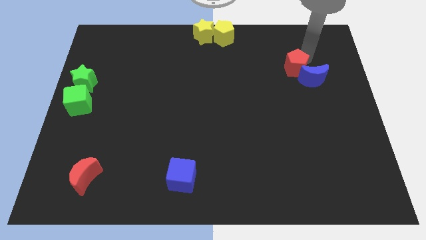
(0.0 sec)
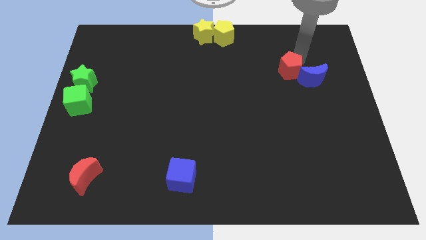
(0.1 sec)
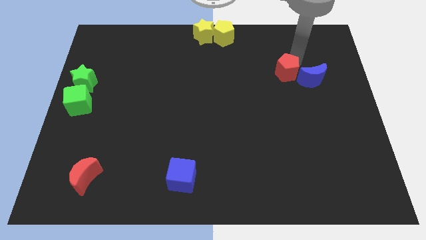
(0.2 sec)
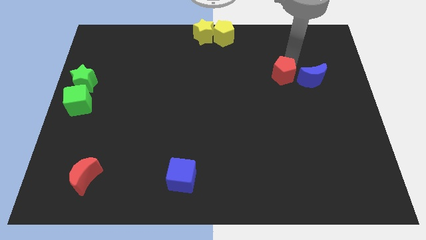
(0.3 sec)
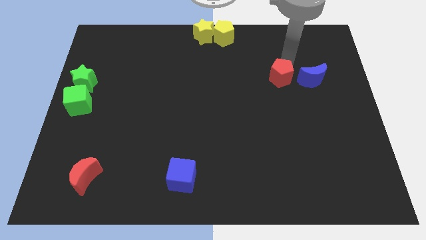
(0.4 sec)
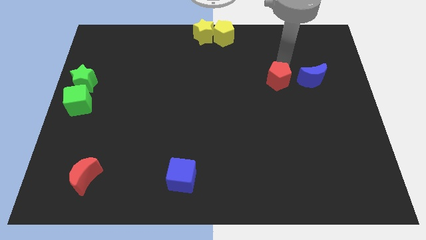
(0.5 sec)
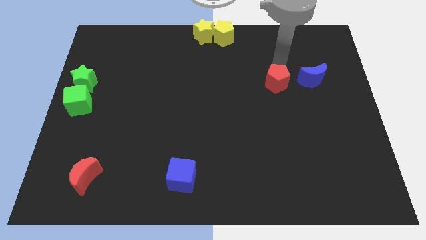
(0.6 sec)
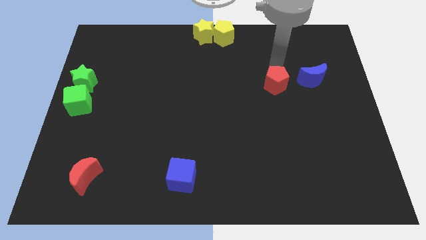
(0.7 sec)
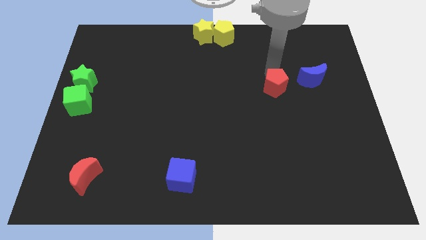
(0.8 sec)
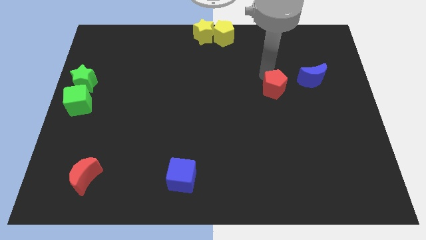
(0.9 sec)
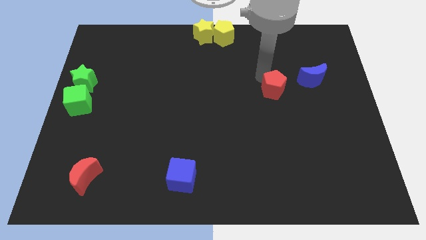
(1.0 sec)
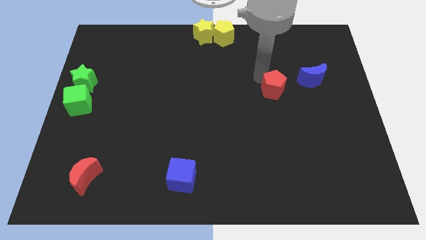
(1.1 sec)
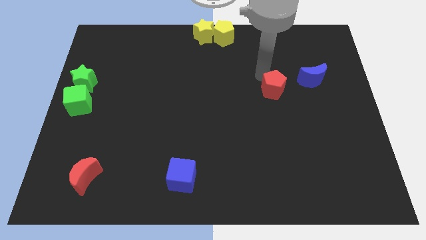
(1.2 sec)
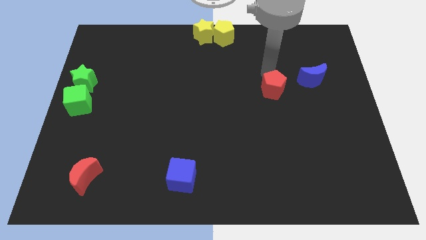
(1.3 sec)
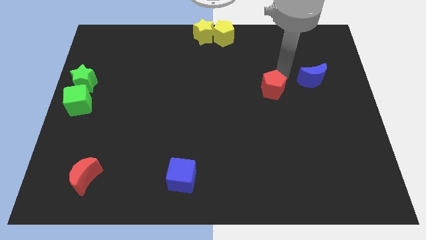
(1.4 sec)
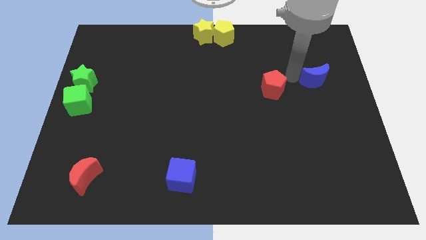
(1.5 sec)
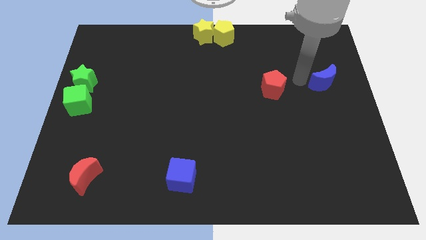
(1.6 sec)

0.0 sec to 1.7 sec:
separate the red pentagon and the blue crescent

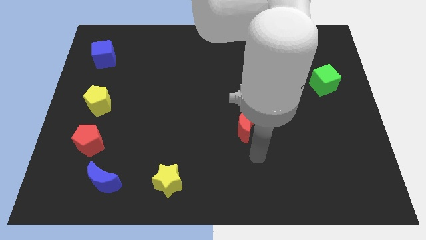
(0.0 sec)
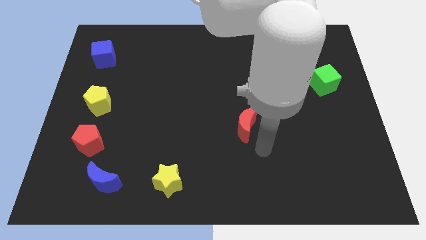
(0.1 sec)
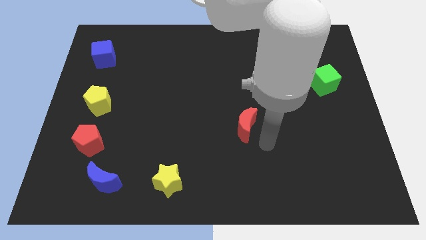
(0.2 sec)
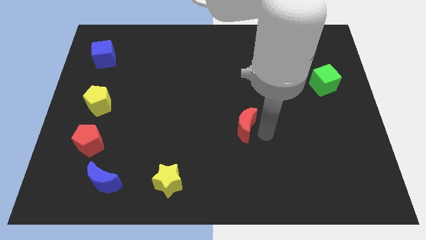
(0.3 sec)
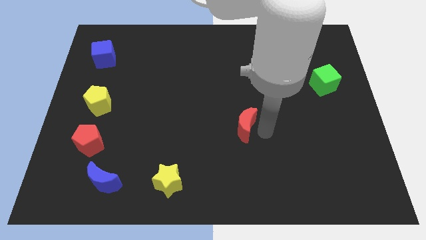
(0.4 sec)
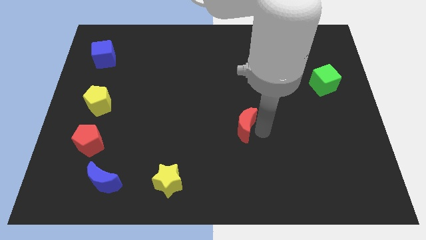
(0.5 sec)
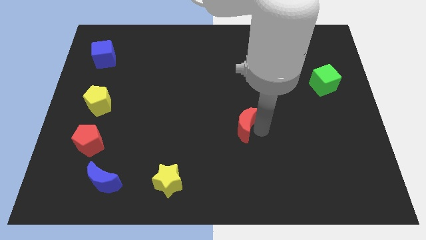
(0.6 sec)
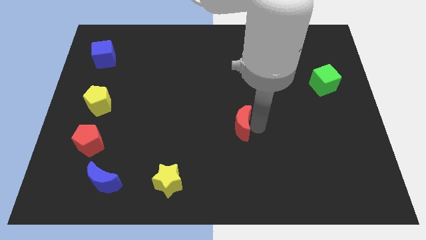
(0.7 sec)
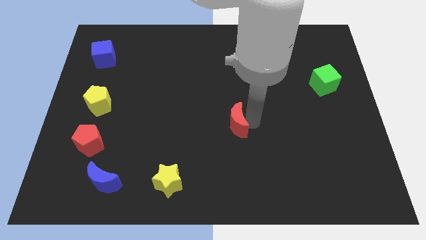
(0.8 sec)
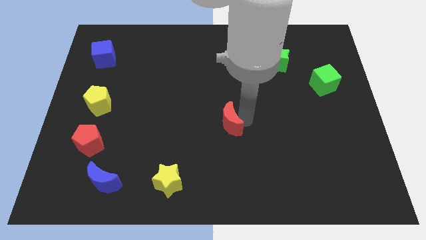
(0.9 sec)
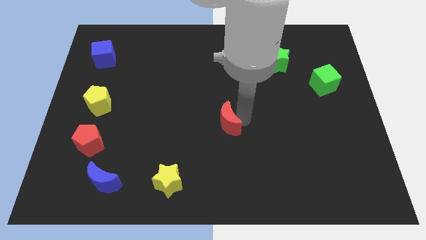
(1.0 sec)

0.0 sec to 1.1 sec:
place red moon to the center of the board

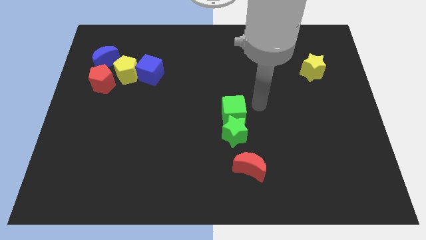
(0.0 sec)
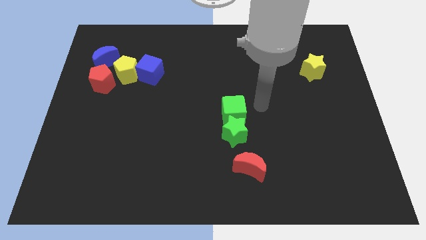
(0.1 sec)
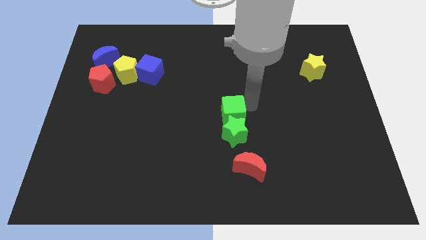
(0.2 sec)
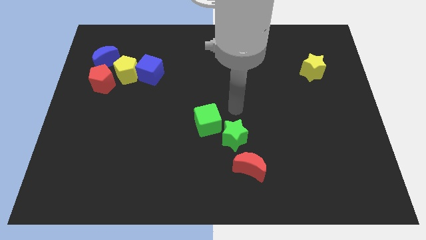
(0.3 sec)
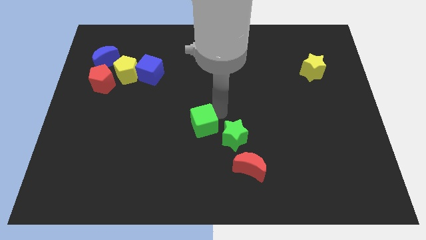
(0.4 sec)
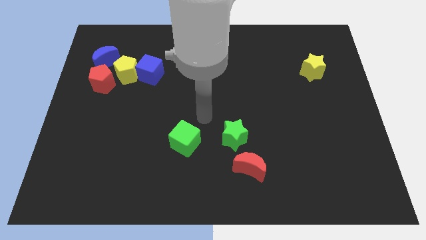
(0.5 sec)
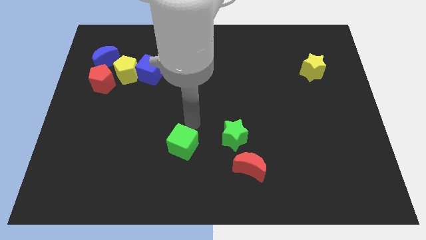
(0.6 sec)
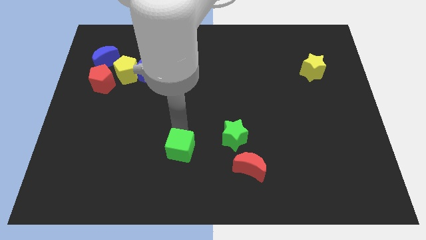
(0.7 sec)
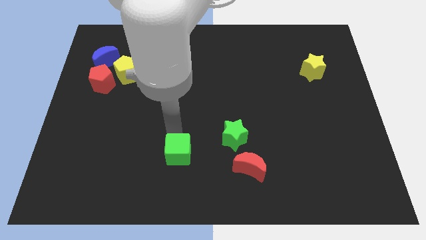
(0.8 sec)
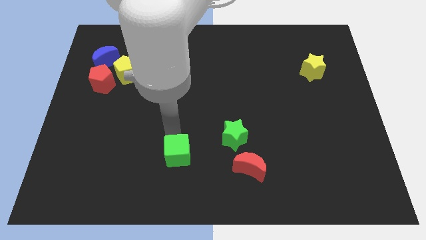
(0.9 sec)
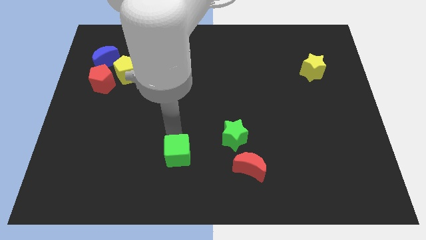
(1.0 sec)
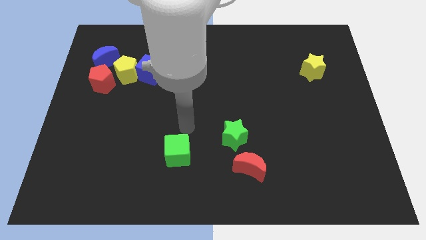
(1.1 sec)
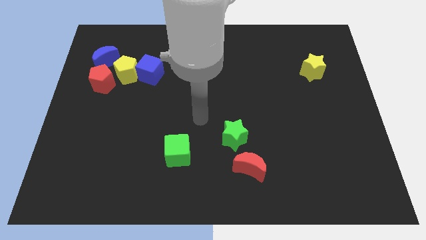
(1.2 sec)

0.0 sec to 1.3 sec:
separate the green cube from the green star

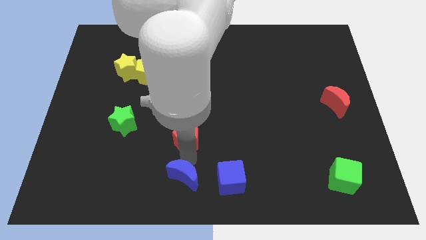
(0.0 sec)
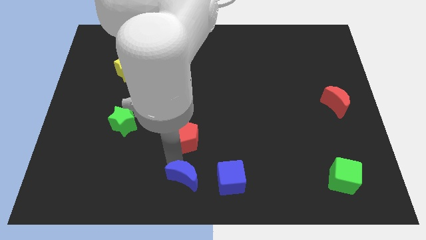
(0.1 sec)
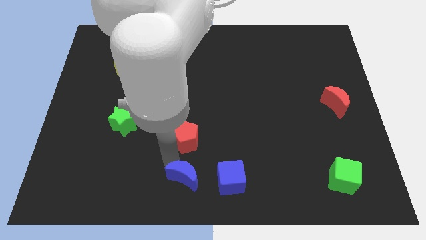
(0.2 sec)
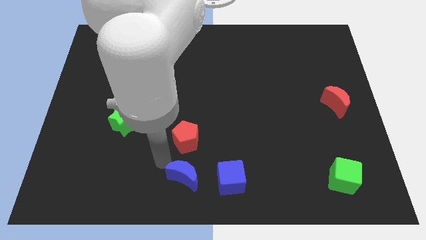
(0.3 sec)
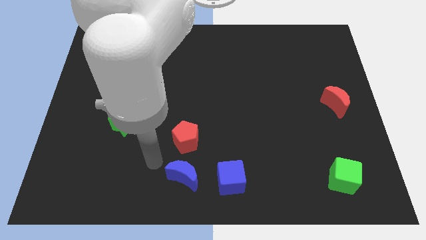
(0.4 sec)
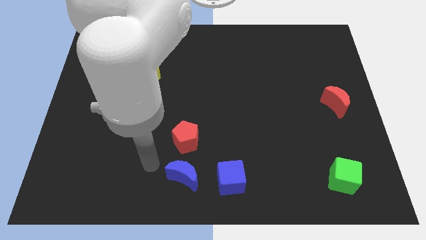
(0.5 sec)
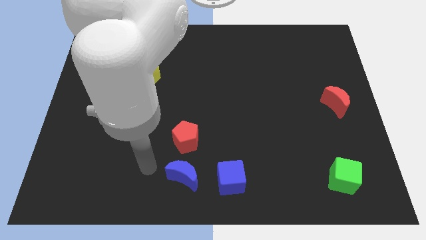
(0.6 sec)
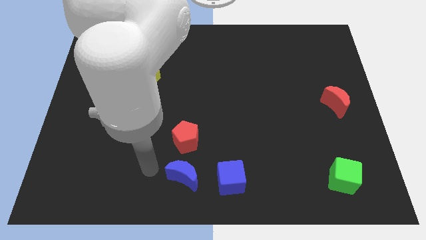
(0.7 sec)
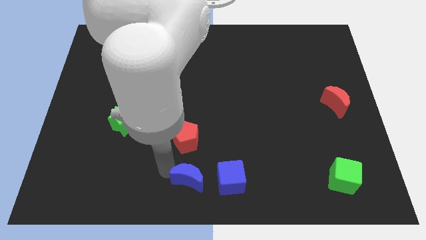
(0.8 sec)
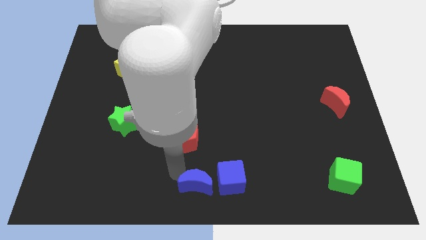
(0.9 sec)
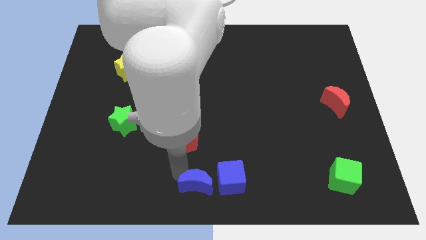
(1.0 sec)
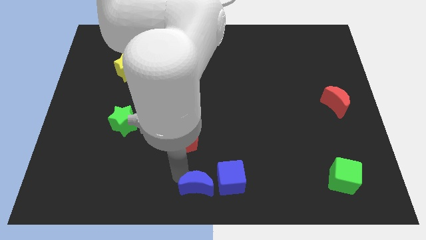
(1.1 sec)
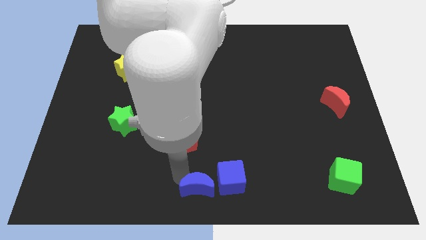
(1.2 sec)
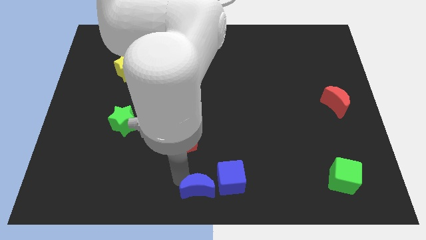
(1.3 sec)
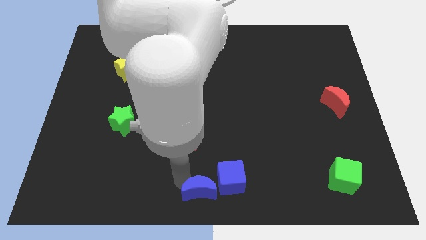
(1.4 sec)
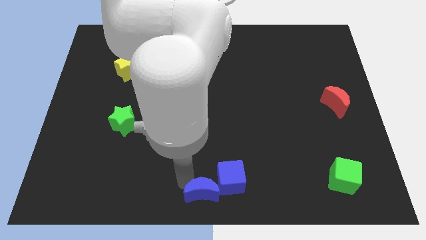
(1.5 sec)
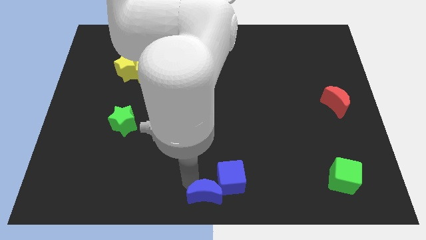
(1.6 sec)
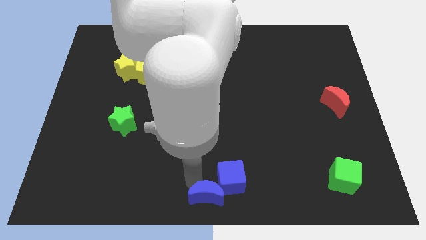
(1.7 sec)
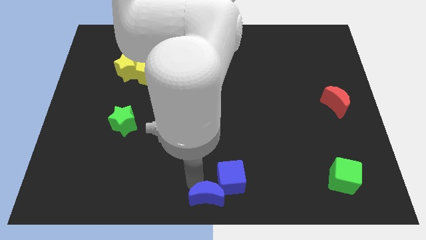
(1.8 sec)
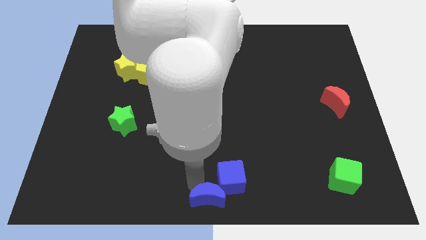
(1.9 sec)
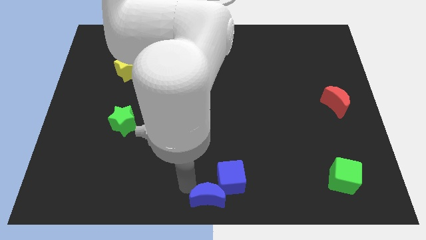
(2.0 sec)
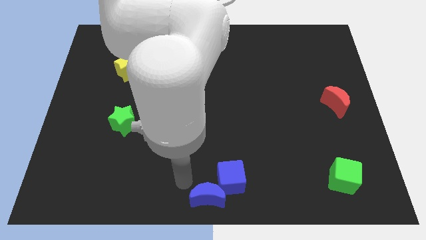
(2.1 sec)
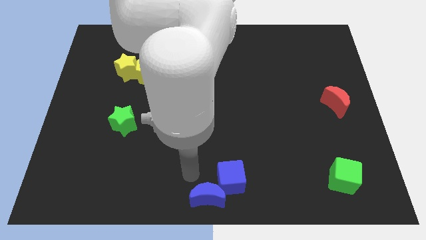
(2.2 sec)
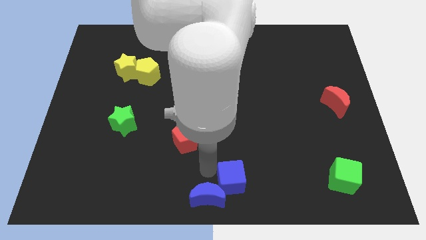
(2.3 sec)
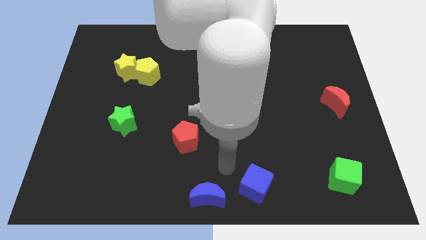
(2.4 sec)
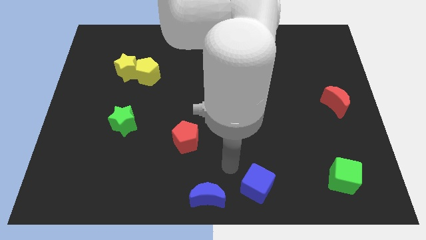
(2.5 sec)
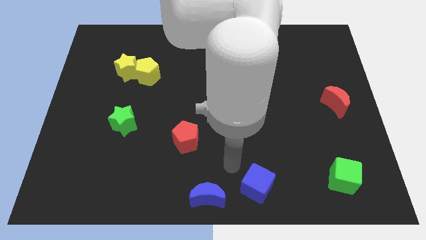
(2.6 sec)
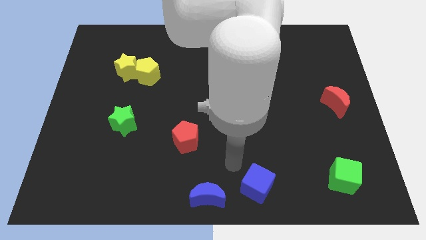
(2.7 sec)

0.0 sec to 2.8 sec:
move blue crescent to the bottom center

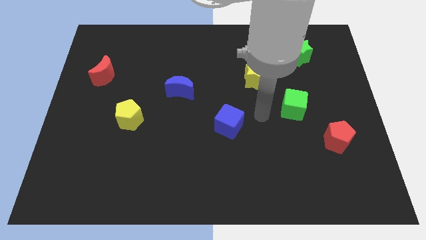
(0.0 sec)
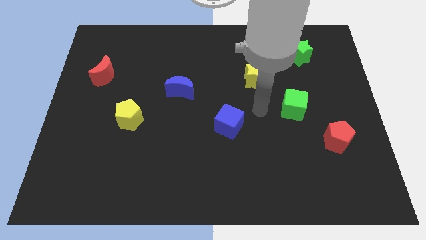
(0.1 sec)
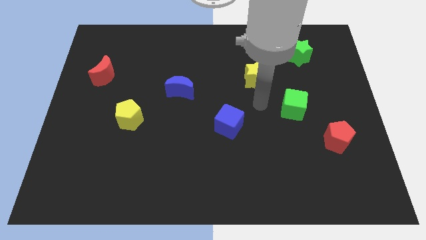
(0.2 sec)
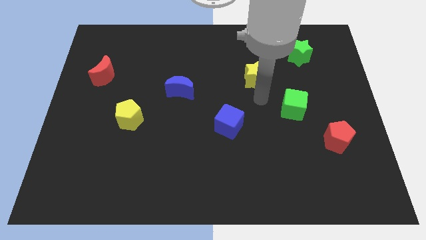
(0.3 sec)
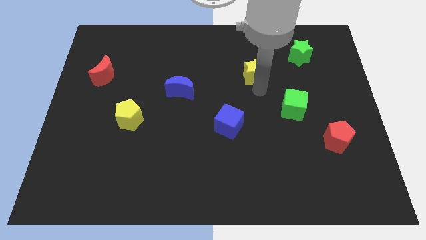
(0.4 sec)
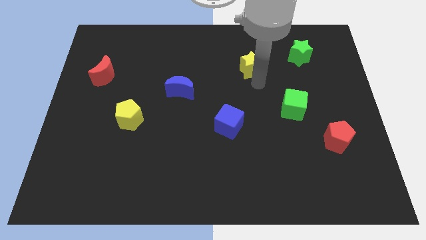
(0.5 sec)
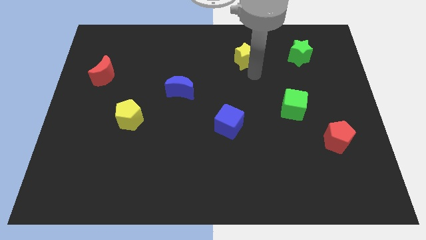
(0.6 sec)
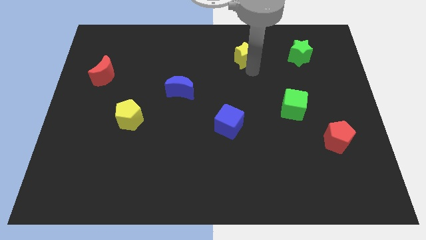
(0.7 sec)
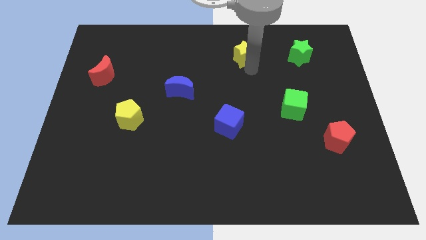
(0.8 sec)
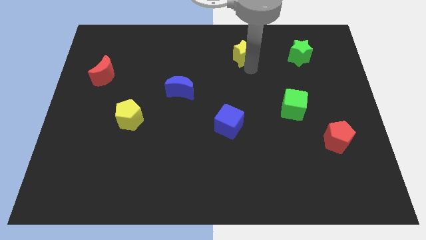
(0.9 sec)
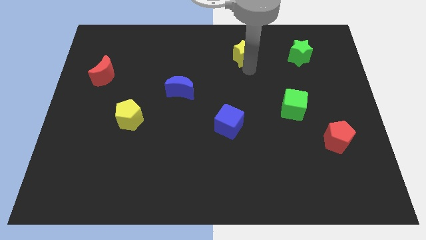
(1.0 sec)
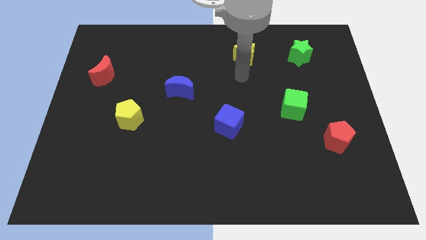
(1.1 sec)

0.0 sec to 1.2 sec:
push the yellow star upward

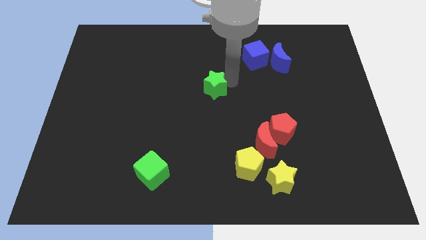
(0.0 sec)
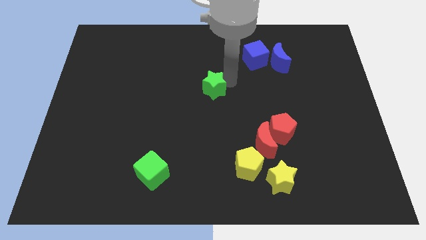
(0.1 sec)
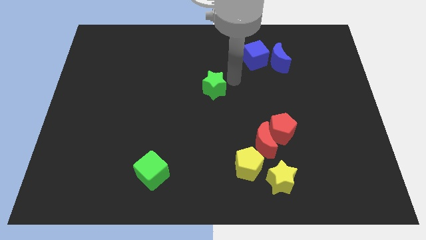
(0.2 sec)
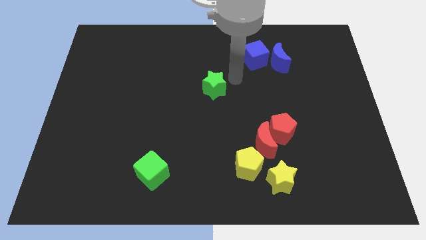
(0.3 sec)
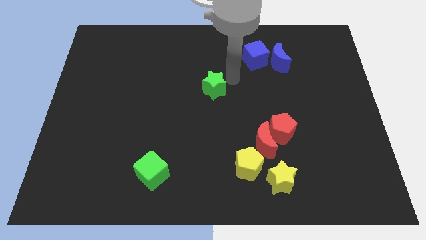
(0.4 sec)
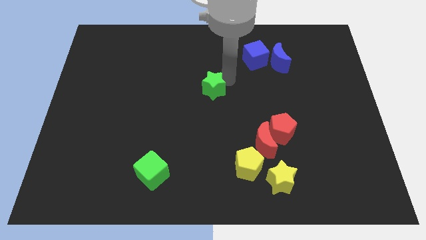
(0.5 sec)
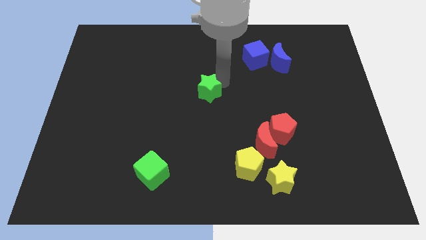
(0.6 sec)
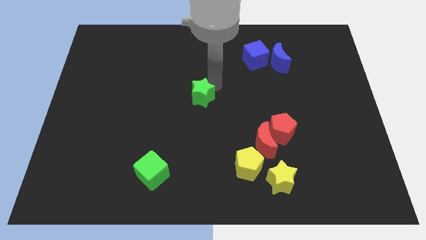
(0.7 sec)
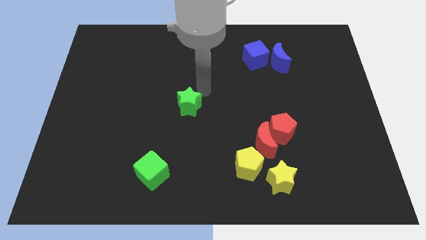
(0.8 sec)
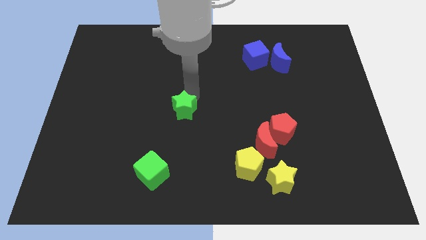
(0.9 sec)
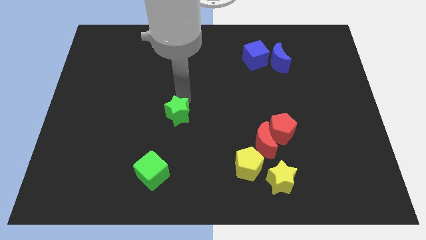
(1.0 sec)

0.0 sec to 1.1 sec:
push the green star towards the bottom
